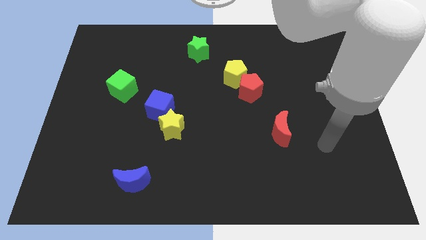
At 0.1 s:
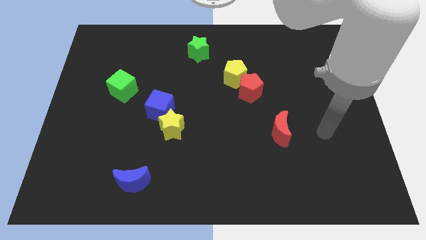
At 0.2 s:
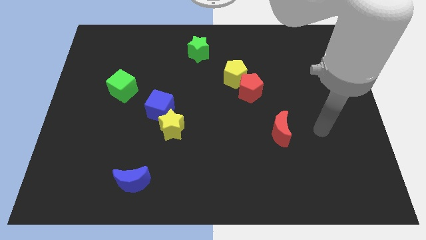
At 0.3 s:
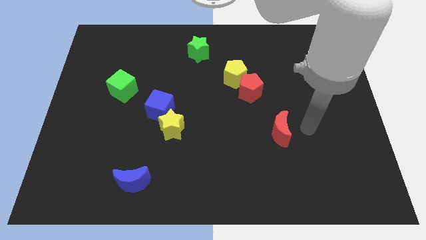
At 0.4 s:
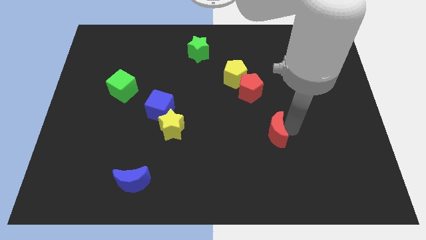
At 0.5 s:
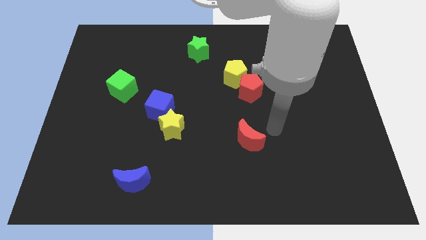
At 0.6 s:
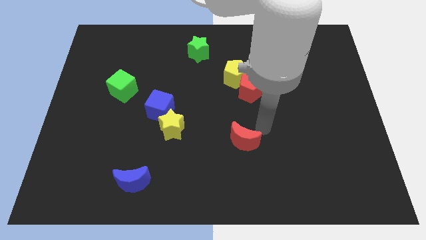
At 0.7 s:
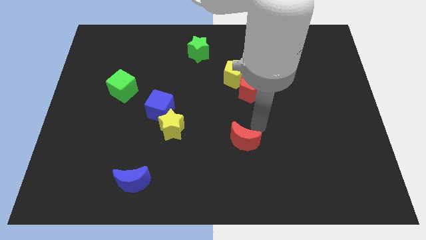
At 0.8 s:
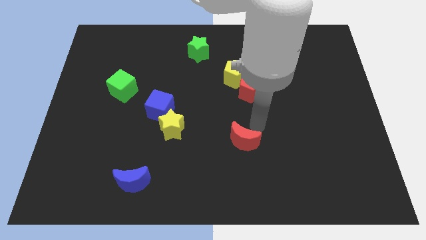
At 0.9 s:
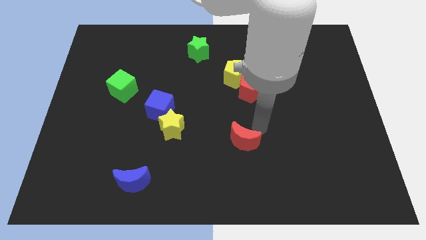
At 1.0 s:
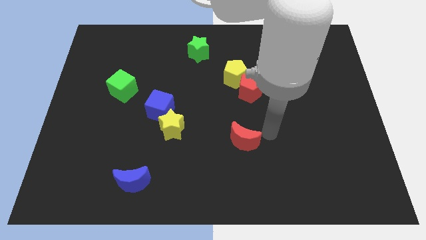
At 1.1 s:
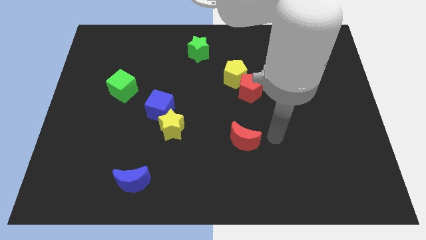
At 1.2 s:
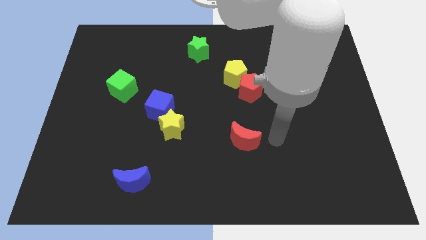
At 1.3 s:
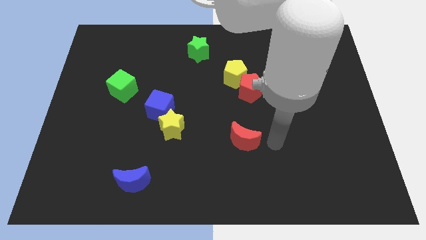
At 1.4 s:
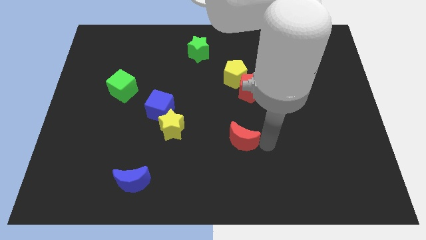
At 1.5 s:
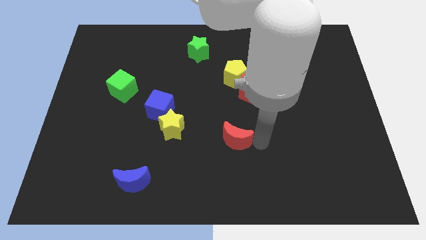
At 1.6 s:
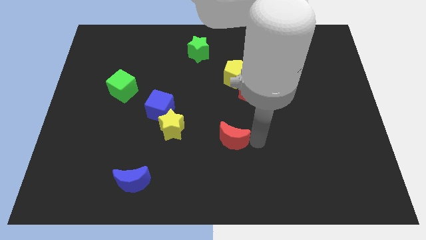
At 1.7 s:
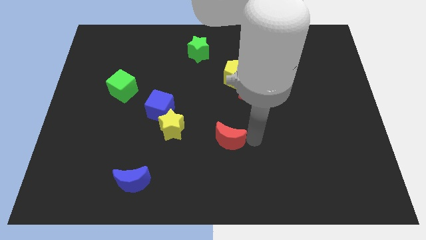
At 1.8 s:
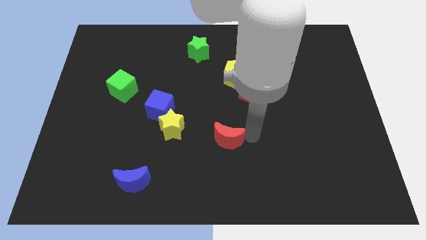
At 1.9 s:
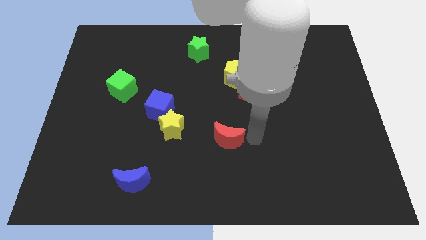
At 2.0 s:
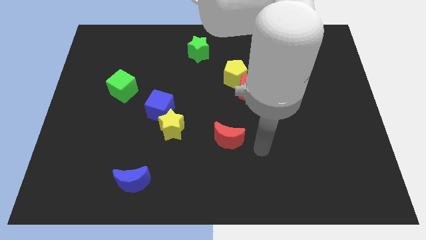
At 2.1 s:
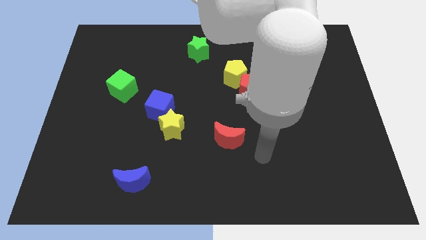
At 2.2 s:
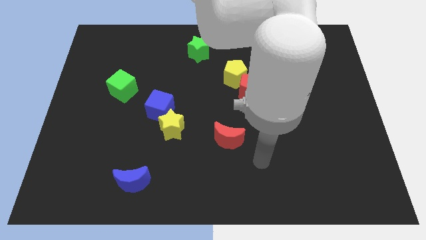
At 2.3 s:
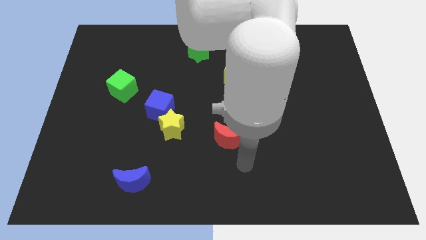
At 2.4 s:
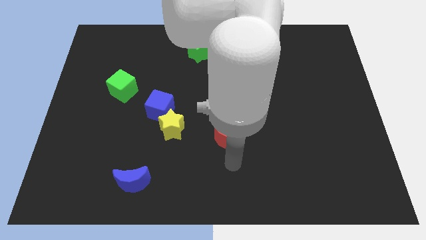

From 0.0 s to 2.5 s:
place the red moon right to the yellow star

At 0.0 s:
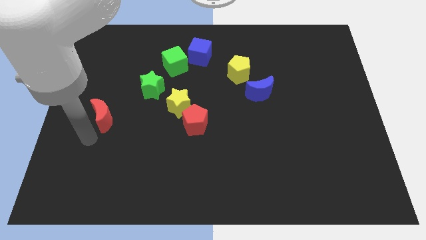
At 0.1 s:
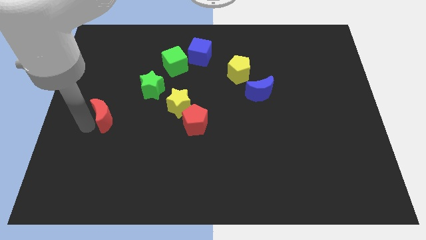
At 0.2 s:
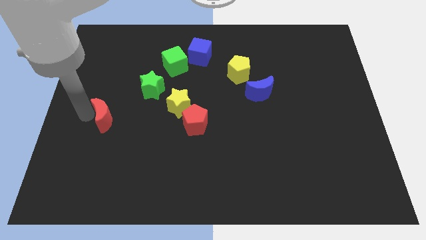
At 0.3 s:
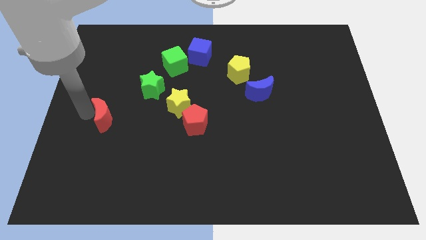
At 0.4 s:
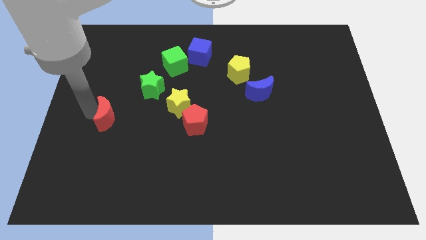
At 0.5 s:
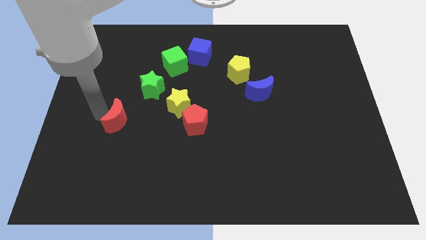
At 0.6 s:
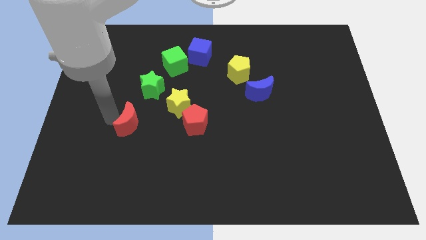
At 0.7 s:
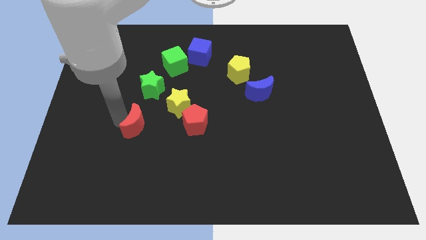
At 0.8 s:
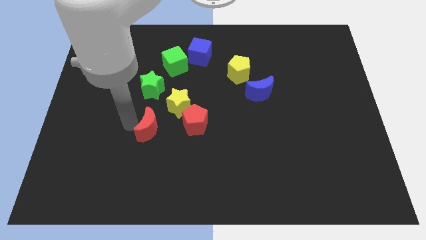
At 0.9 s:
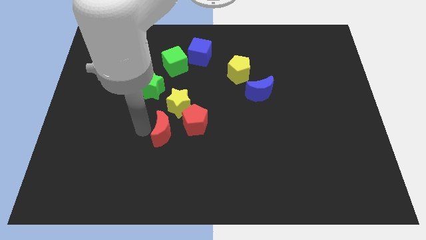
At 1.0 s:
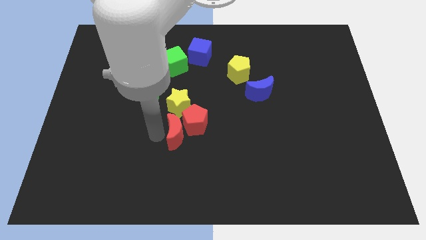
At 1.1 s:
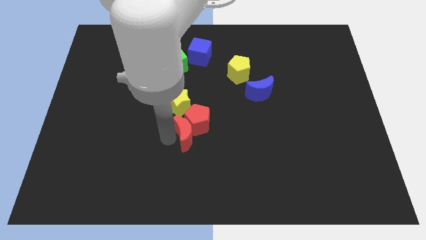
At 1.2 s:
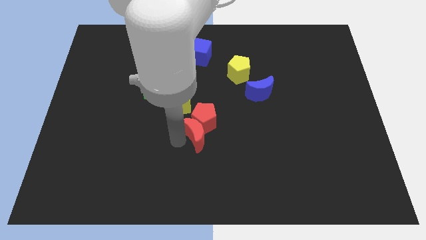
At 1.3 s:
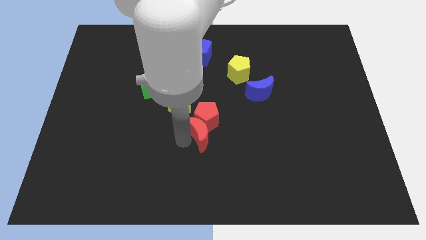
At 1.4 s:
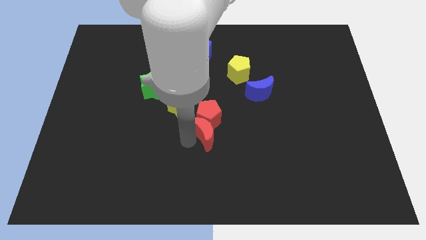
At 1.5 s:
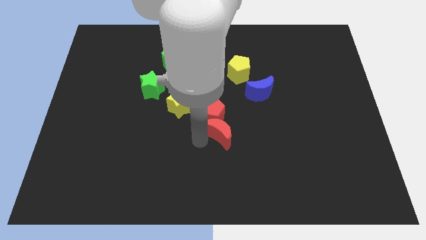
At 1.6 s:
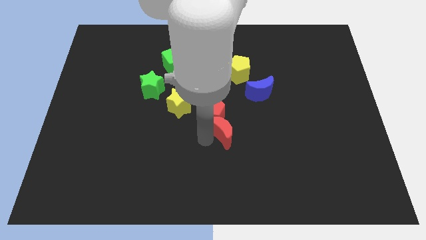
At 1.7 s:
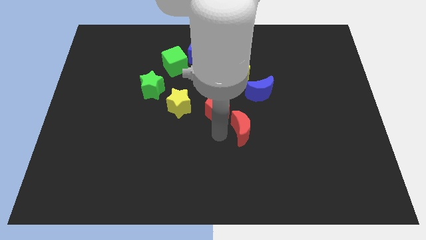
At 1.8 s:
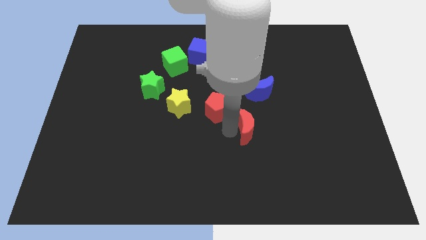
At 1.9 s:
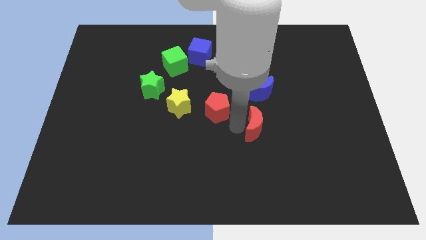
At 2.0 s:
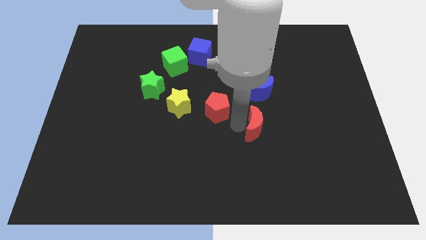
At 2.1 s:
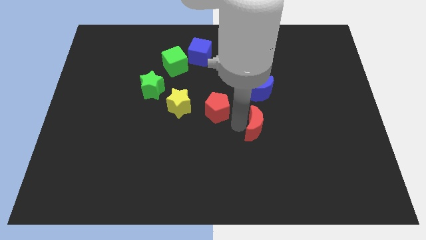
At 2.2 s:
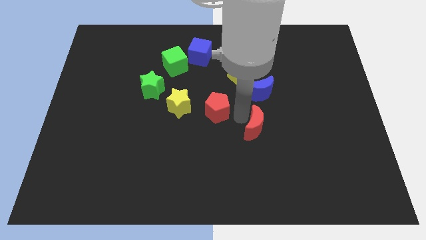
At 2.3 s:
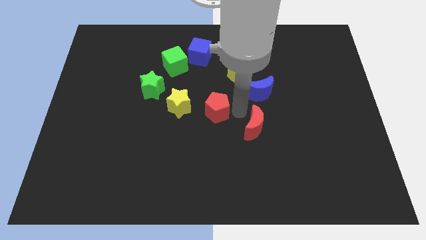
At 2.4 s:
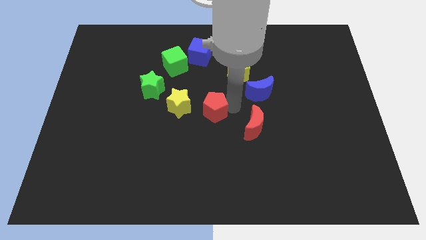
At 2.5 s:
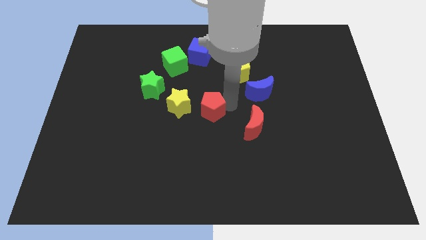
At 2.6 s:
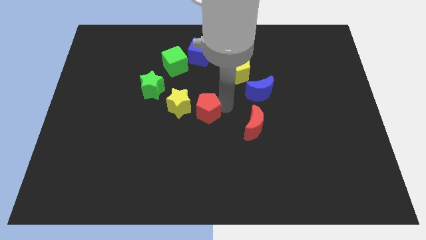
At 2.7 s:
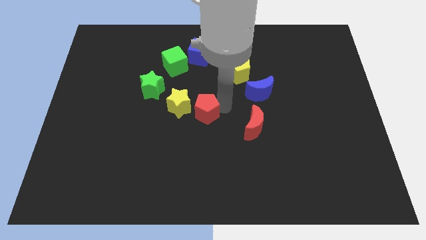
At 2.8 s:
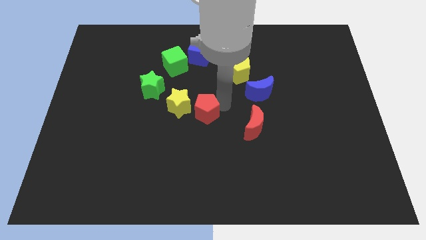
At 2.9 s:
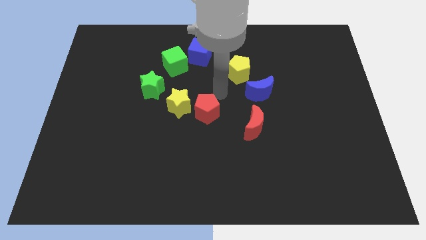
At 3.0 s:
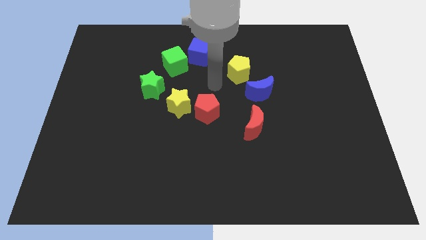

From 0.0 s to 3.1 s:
slide red crescent below the blue crescent

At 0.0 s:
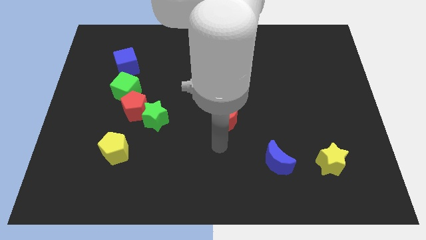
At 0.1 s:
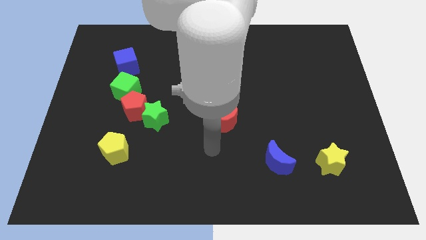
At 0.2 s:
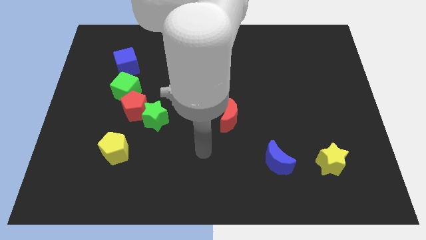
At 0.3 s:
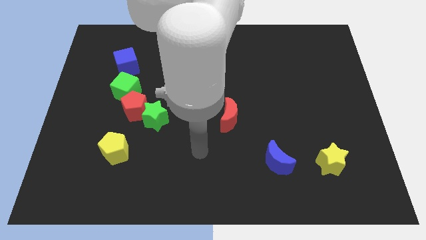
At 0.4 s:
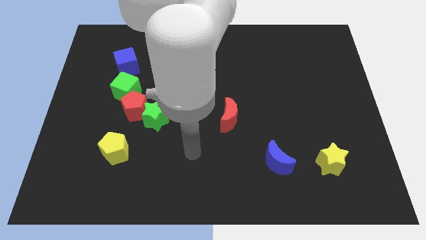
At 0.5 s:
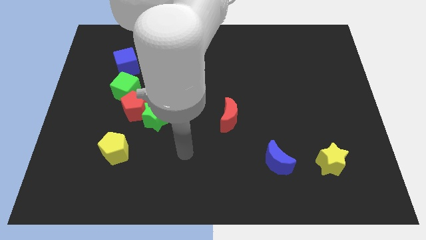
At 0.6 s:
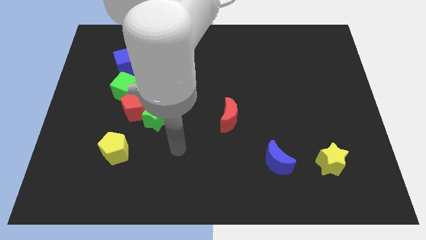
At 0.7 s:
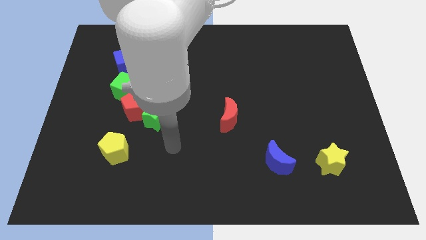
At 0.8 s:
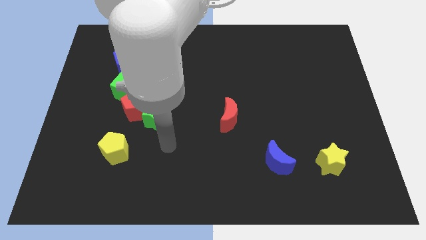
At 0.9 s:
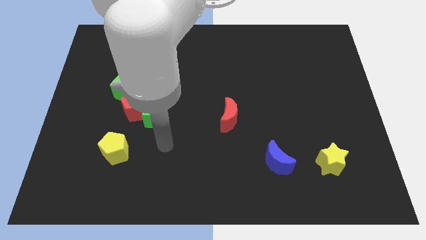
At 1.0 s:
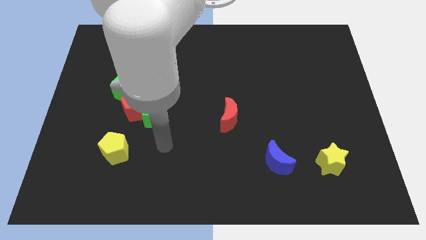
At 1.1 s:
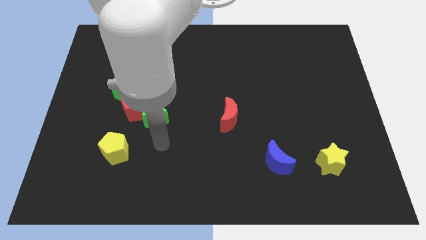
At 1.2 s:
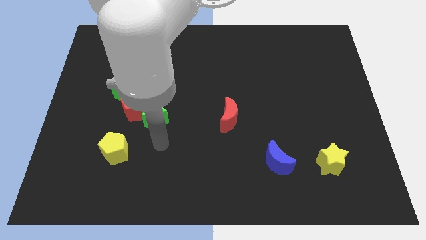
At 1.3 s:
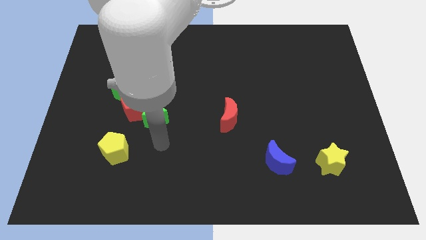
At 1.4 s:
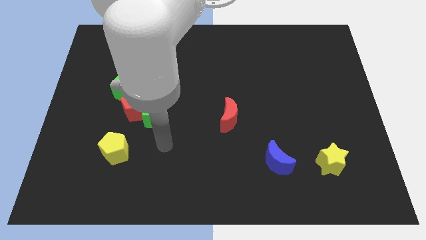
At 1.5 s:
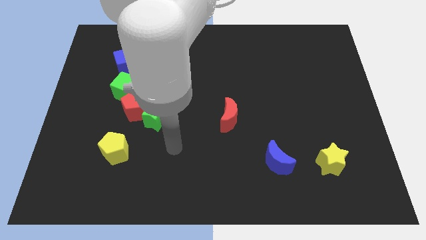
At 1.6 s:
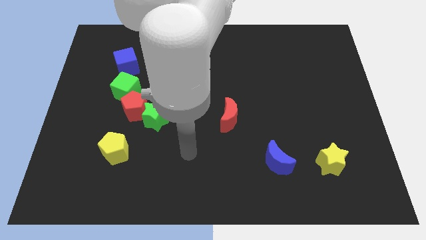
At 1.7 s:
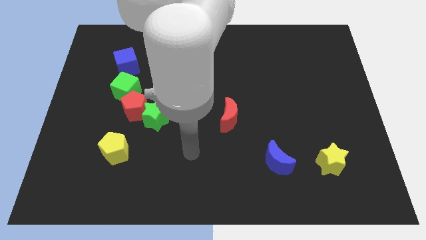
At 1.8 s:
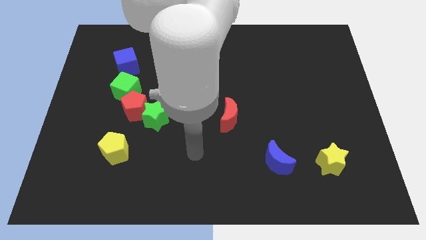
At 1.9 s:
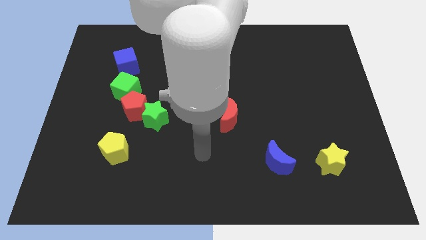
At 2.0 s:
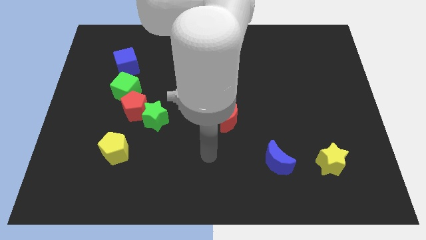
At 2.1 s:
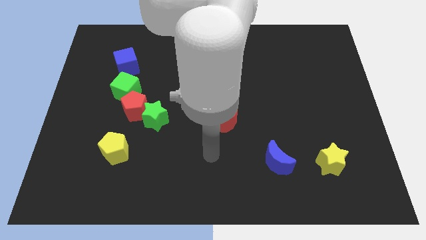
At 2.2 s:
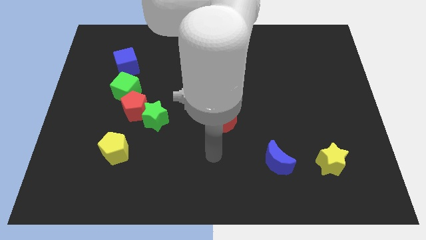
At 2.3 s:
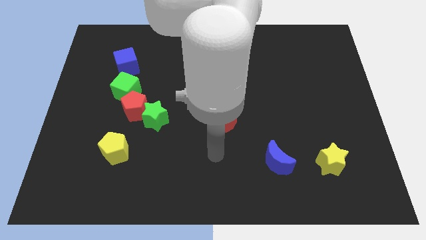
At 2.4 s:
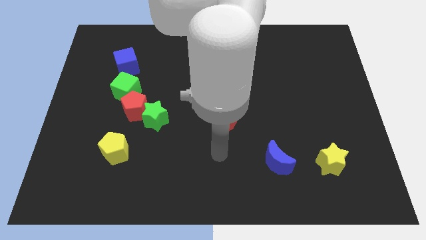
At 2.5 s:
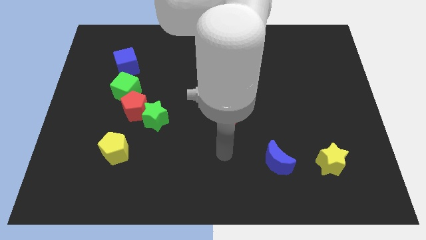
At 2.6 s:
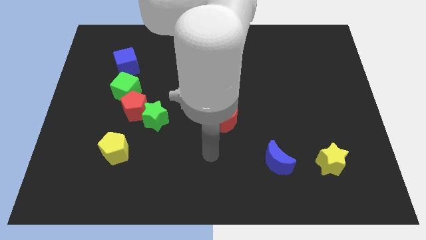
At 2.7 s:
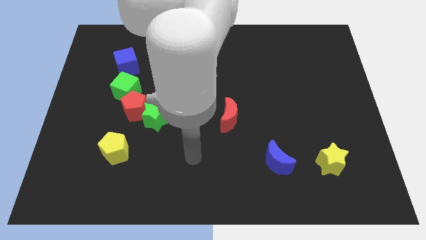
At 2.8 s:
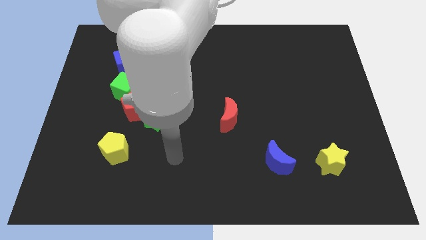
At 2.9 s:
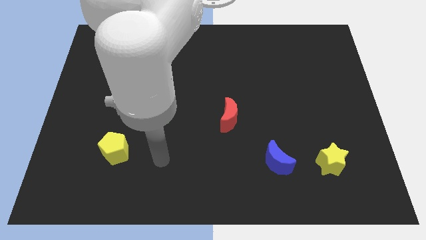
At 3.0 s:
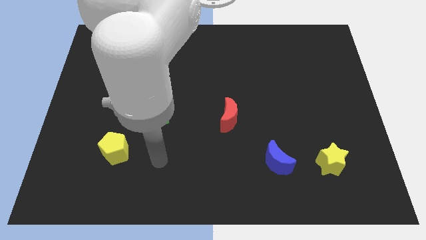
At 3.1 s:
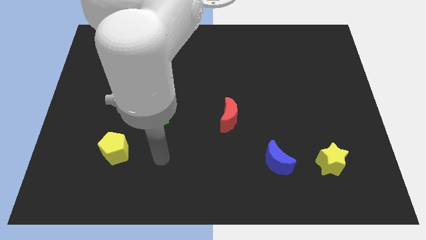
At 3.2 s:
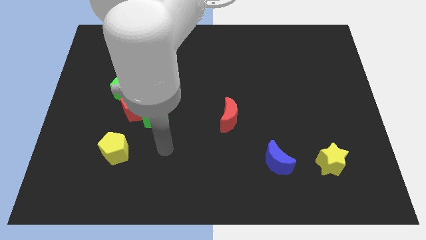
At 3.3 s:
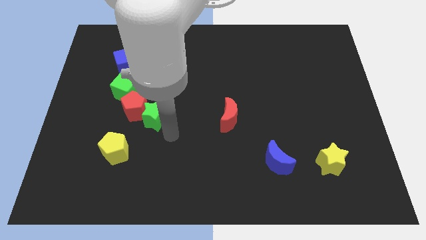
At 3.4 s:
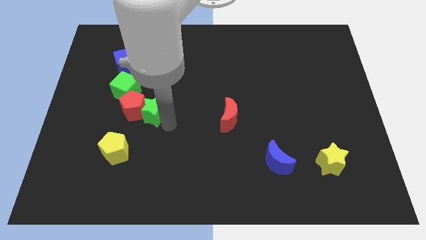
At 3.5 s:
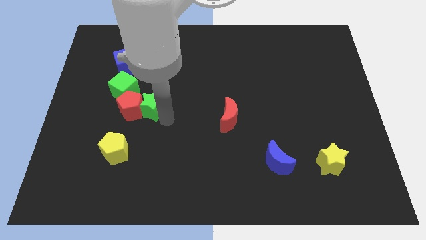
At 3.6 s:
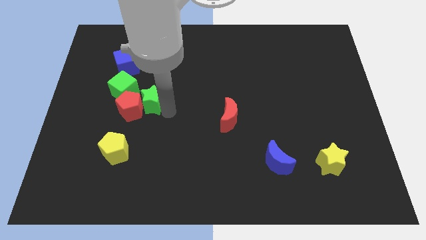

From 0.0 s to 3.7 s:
touch the bottom of green star
